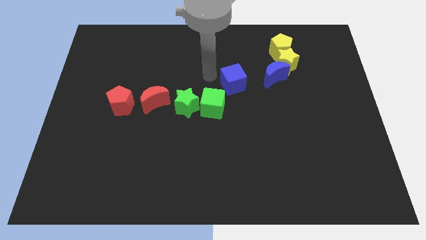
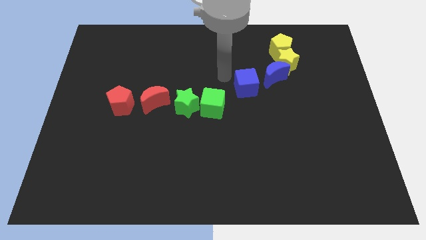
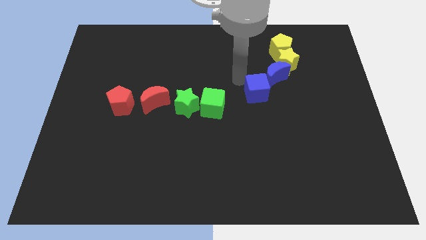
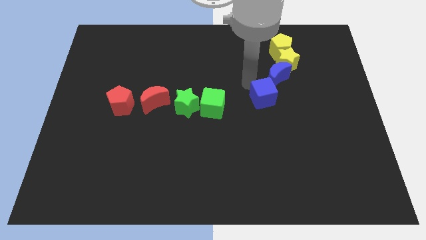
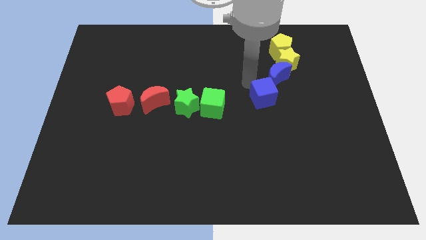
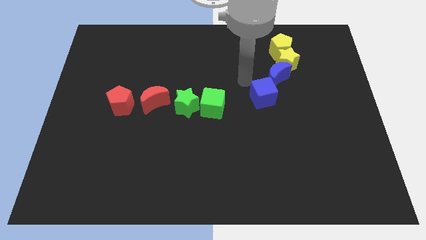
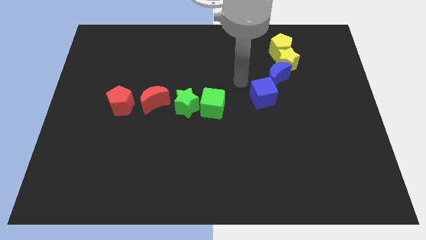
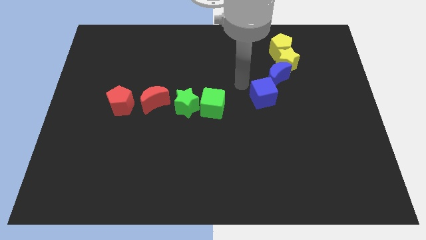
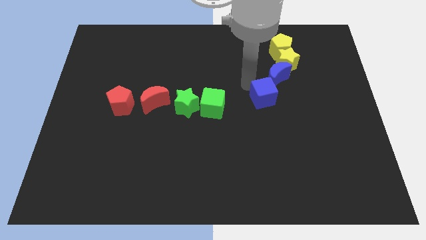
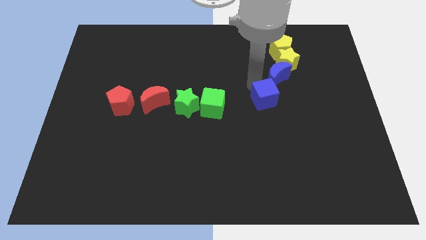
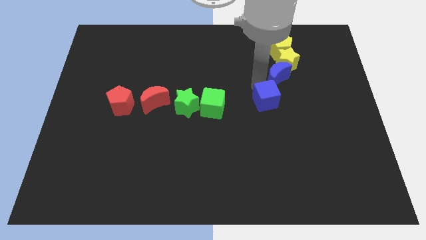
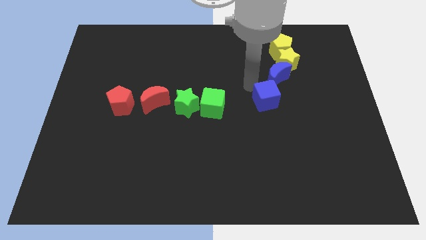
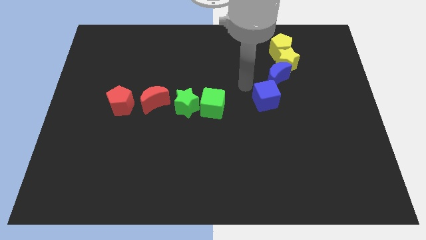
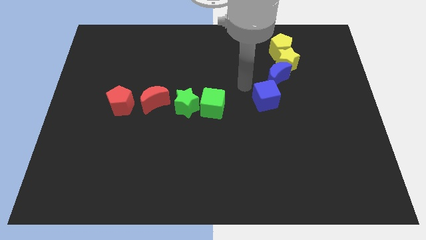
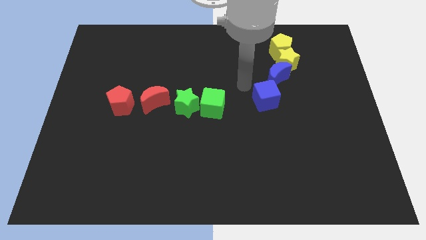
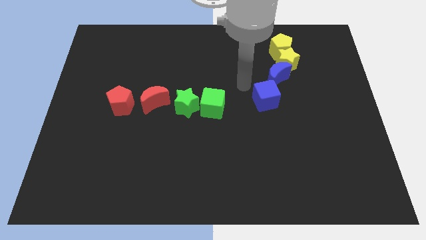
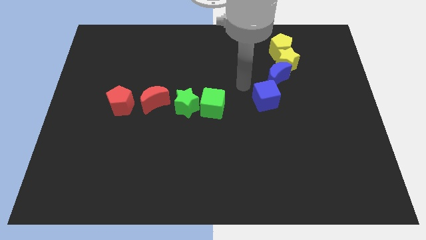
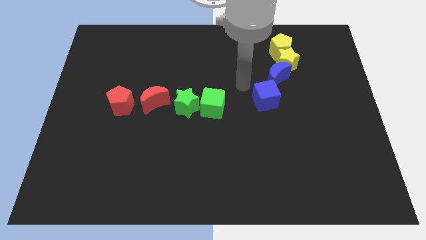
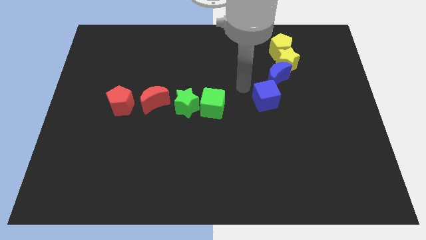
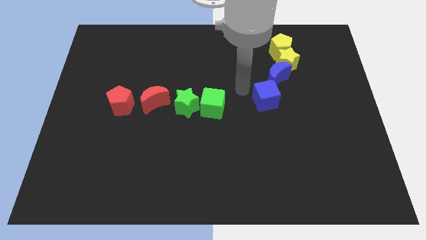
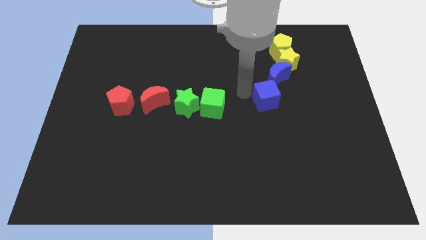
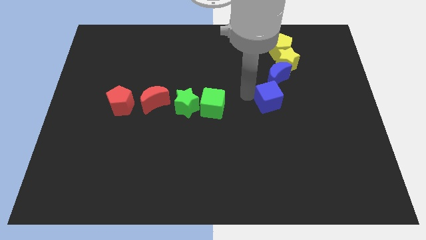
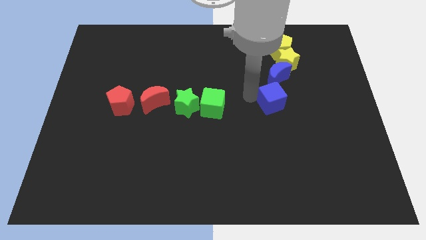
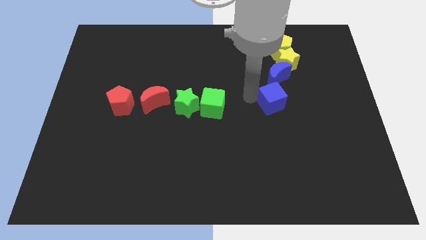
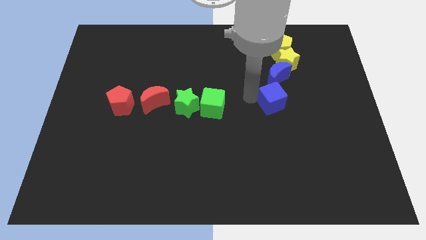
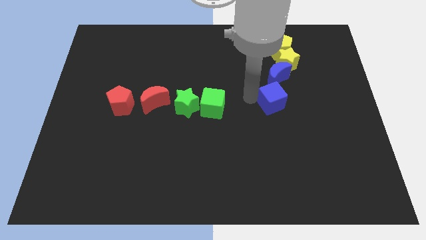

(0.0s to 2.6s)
push the blue cube to the left bottom of the blue crescent

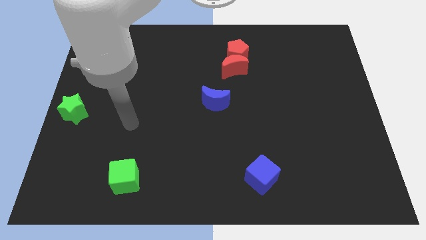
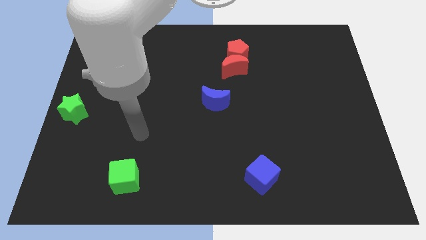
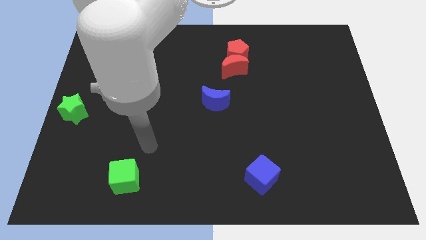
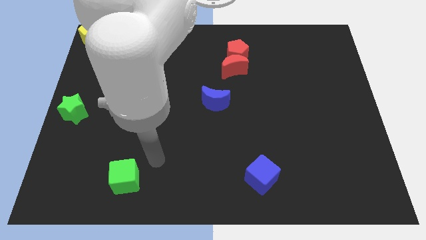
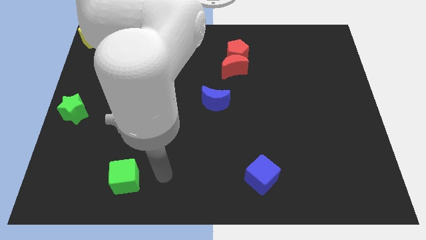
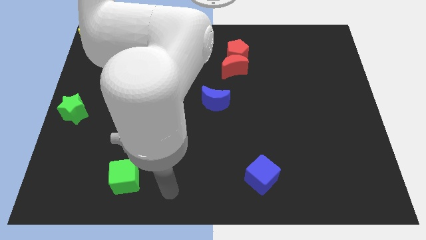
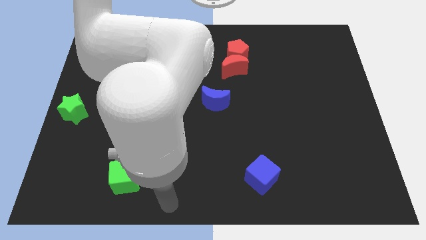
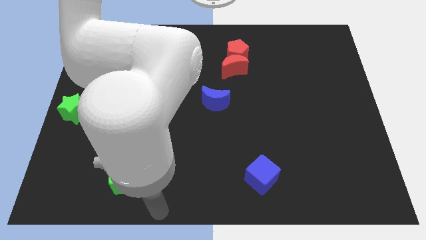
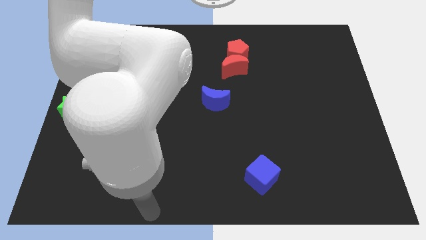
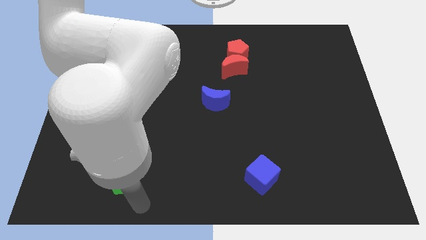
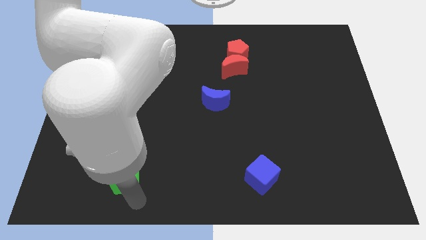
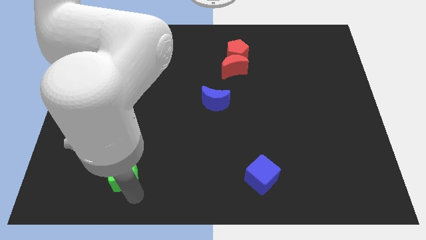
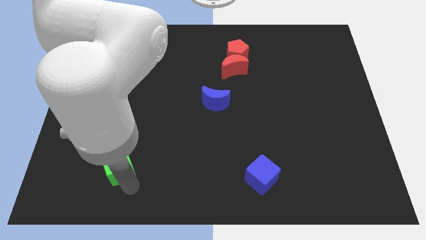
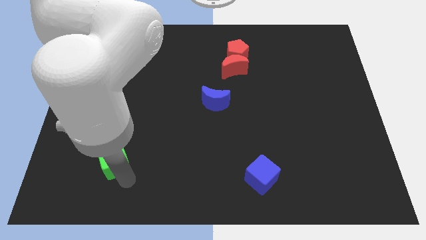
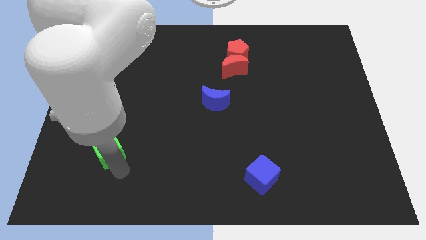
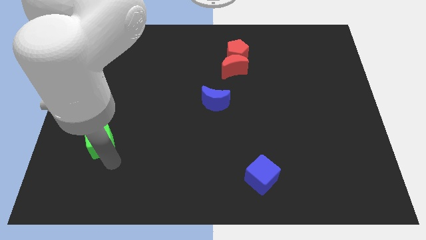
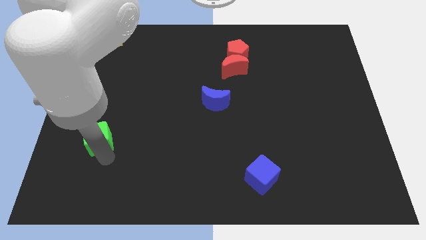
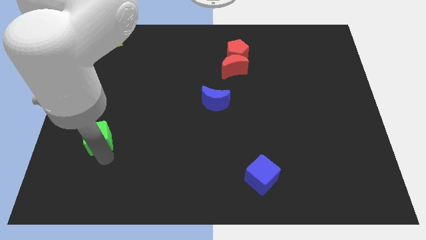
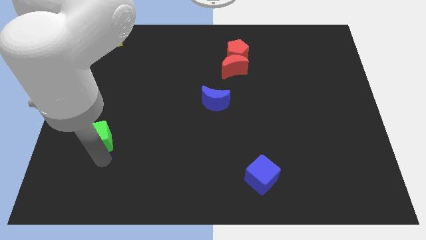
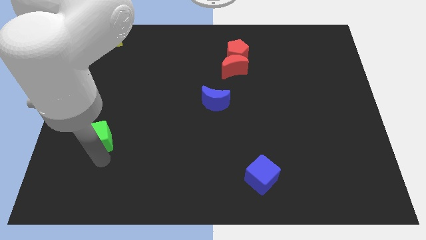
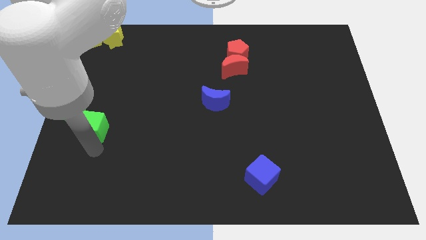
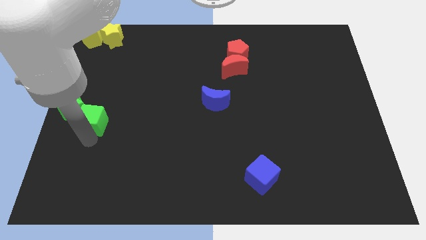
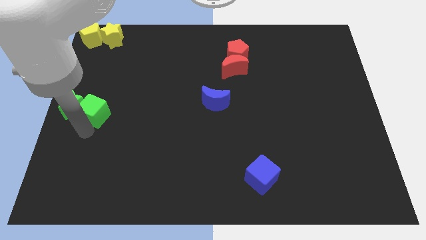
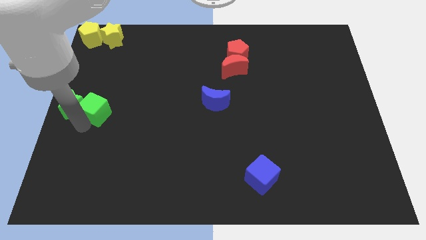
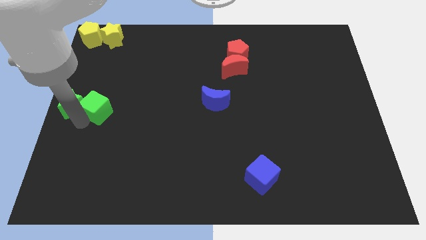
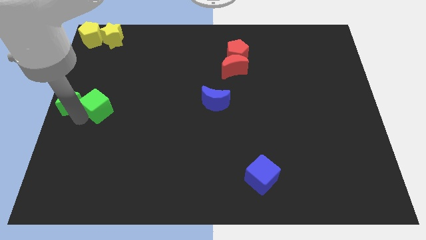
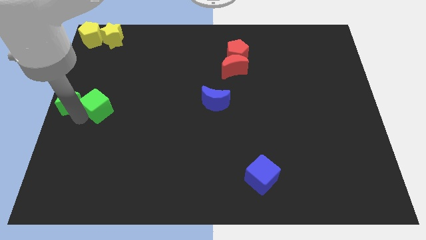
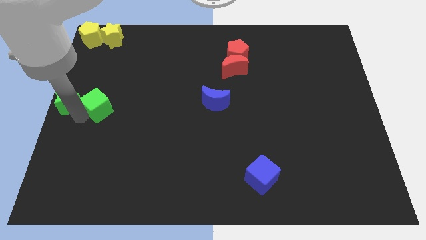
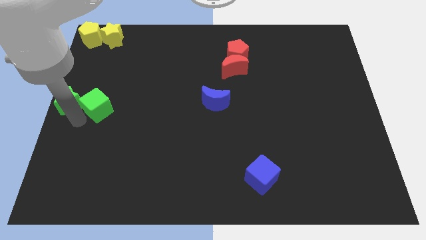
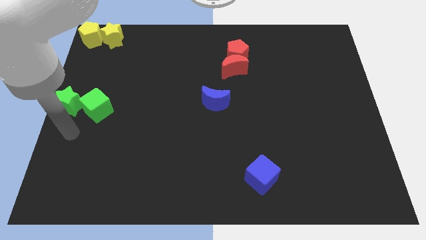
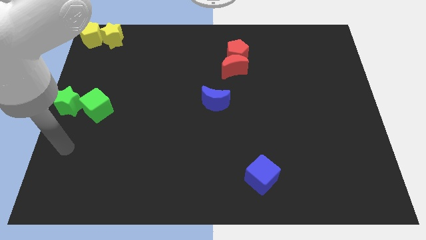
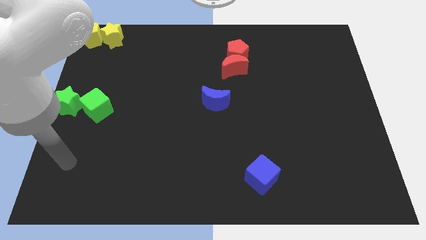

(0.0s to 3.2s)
push the green cube to the right side of the green star

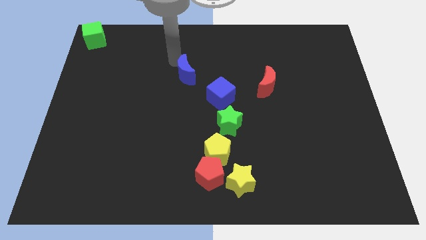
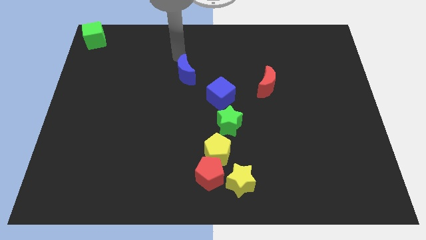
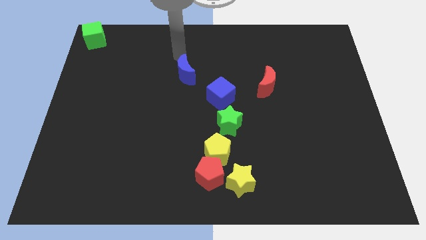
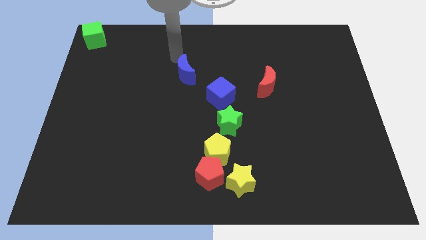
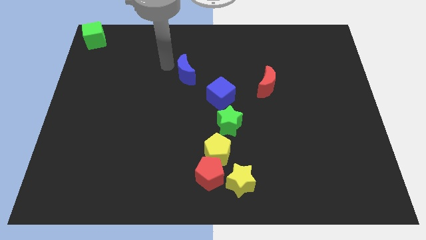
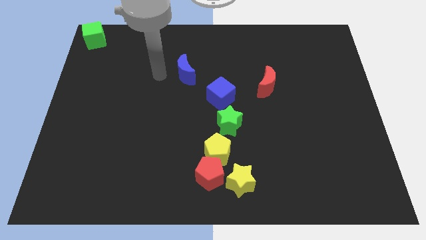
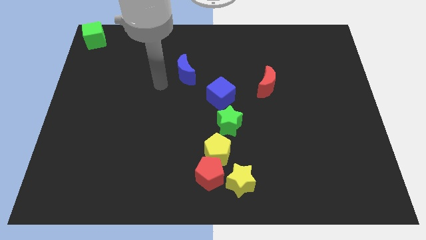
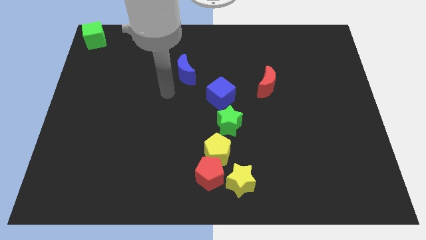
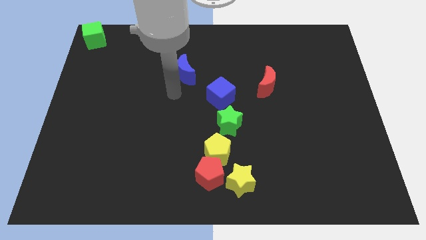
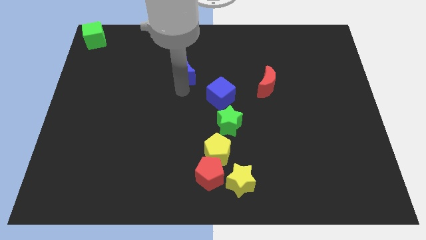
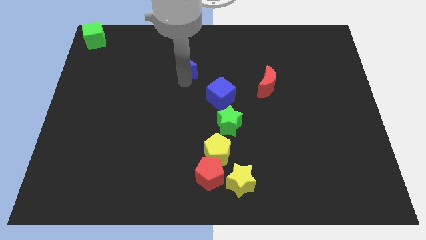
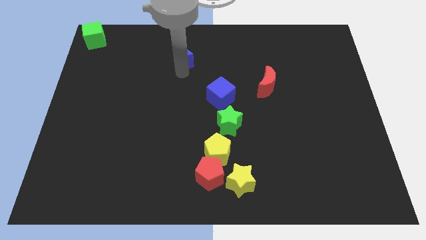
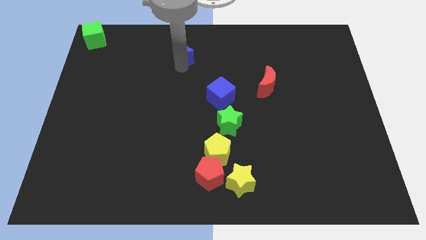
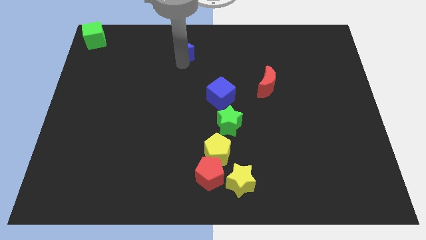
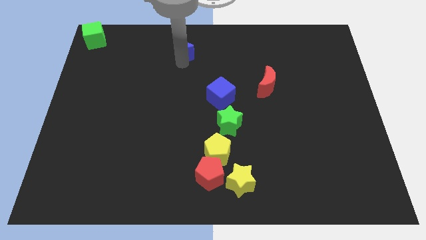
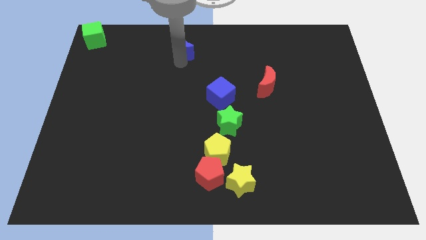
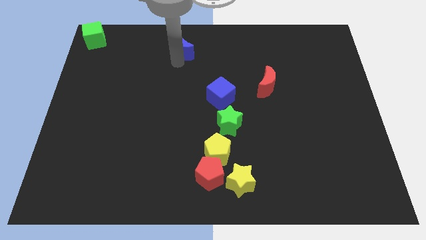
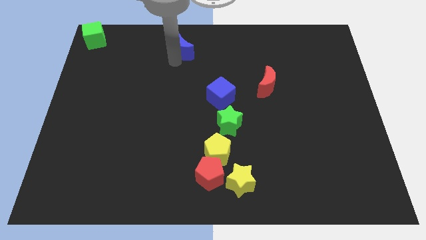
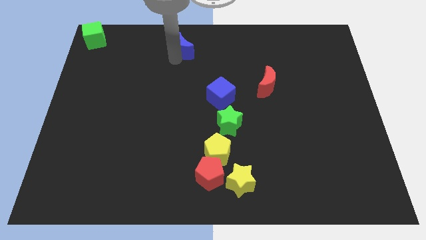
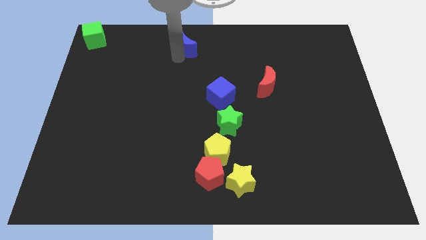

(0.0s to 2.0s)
separate blue moon from blue cube

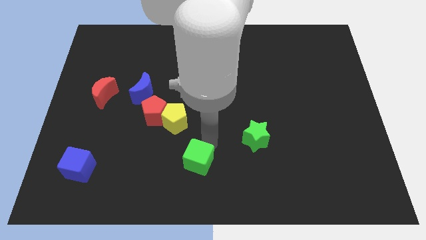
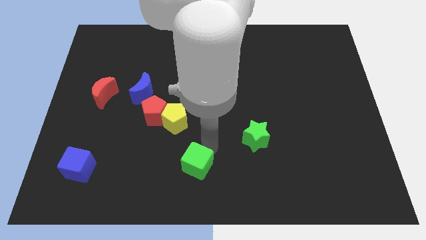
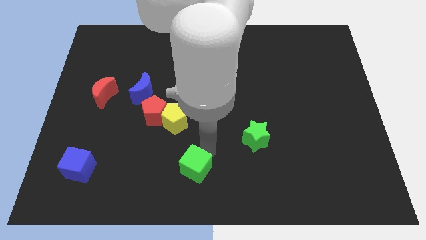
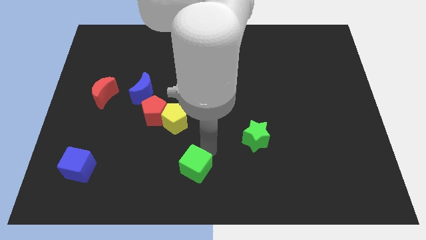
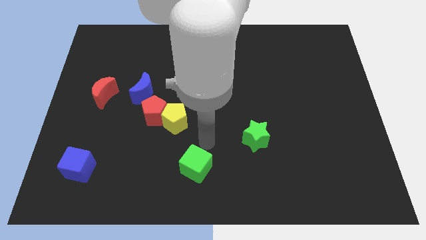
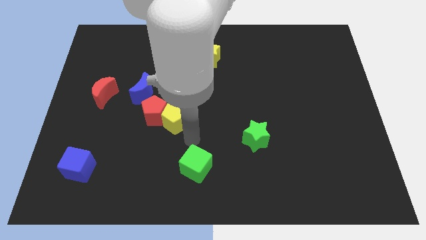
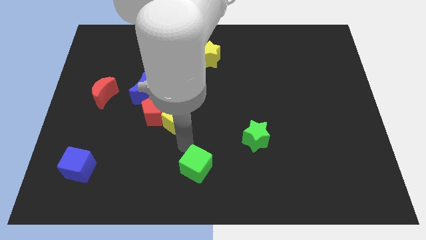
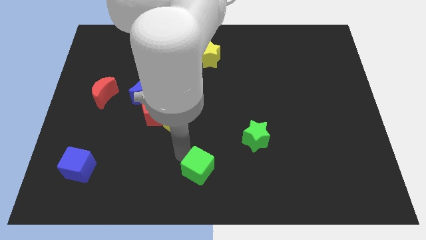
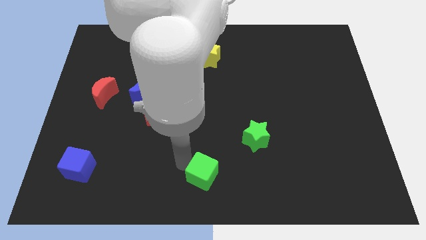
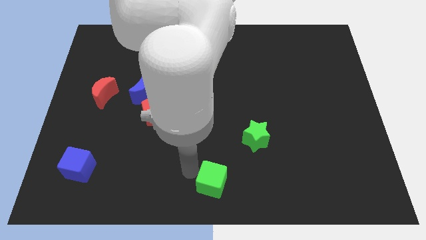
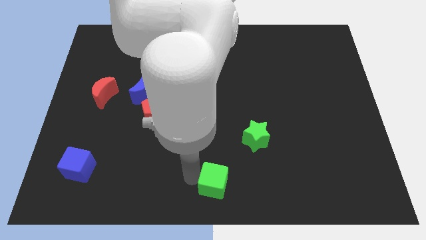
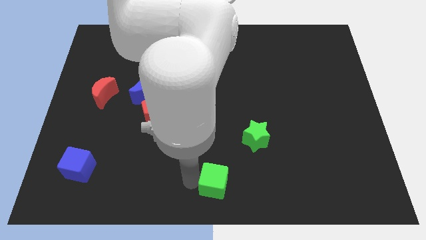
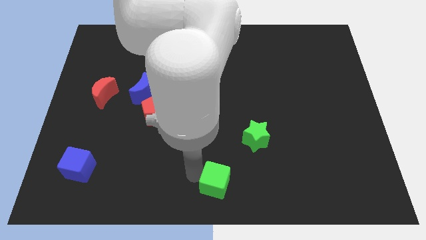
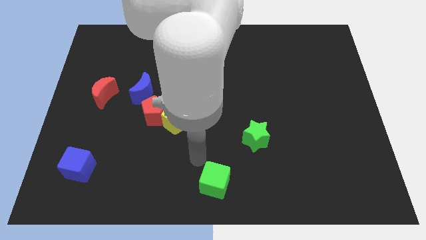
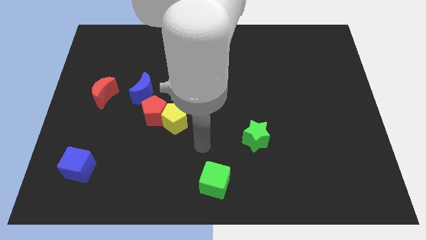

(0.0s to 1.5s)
push the green cube to the bottom left side of the green star
